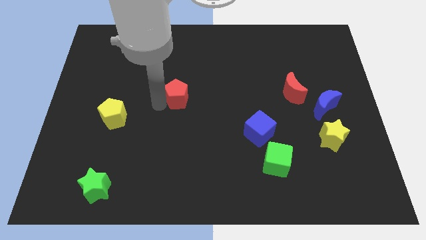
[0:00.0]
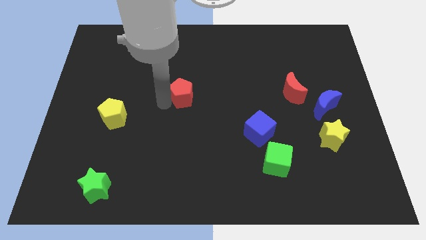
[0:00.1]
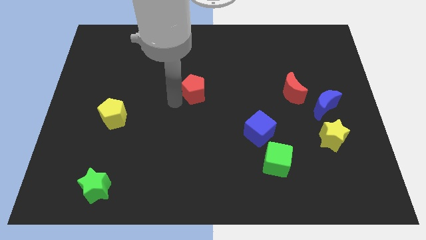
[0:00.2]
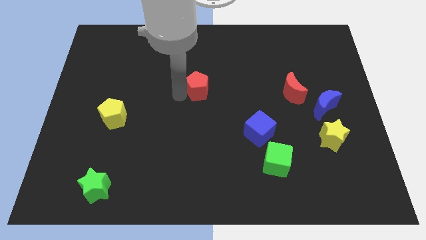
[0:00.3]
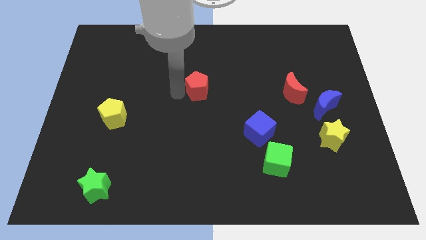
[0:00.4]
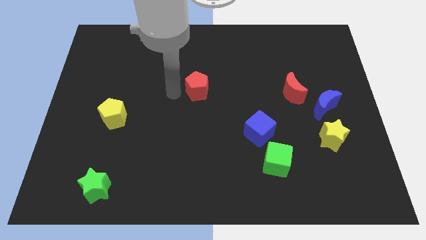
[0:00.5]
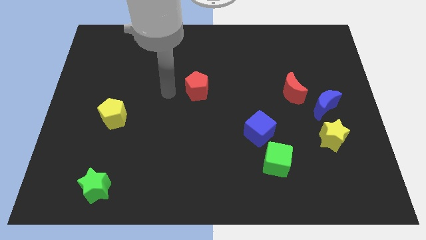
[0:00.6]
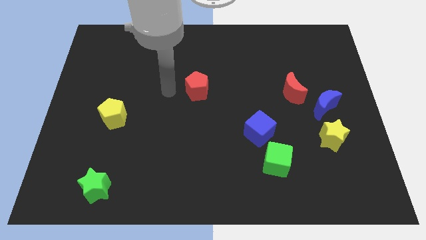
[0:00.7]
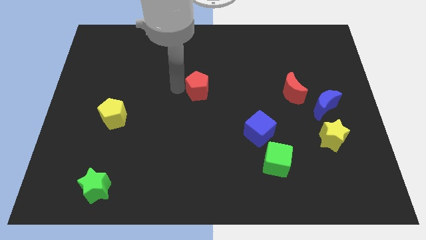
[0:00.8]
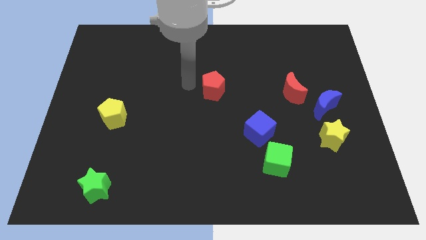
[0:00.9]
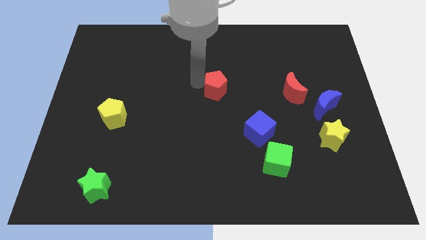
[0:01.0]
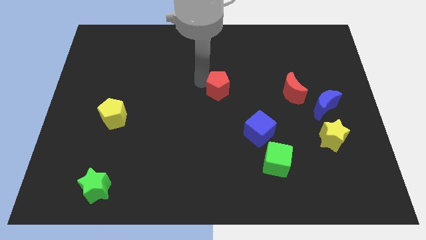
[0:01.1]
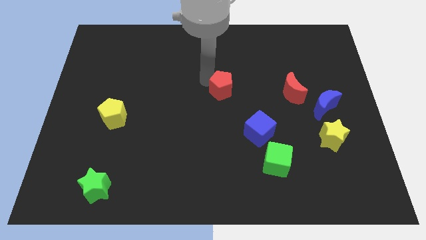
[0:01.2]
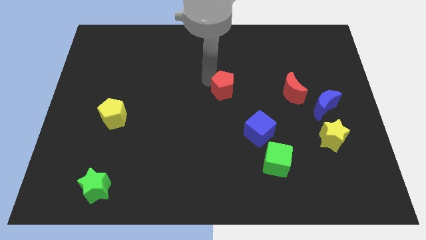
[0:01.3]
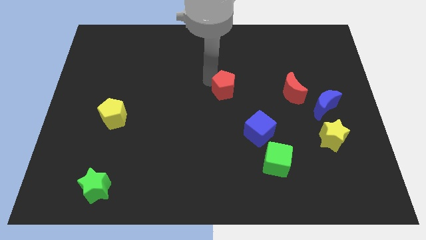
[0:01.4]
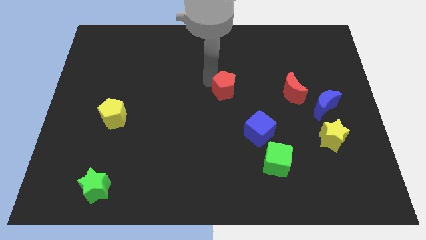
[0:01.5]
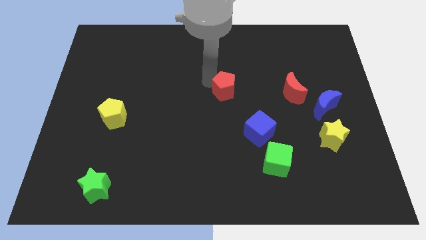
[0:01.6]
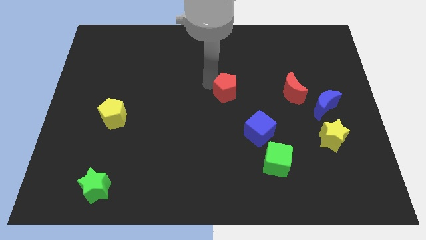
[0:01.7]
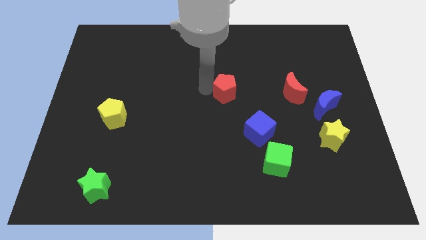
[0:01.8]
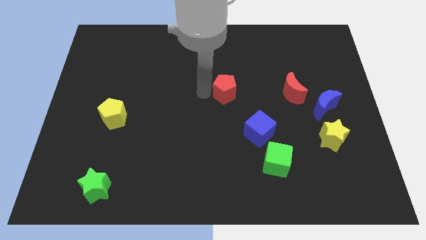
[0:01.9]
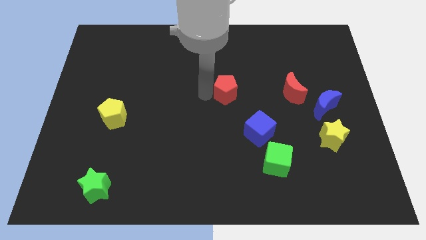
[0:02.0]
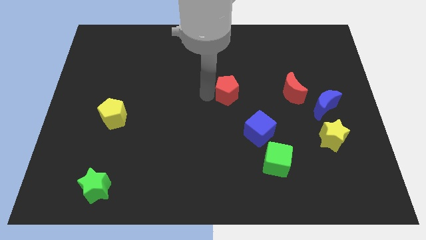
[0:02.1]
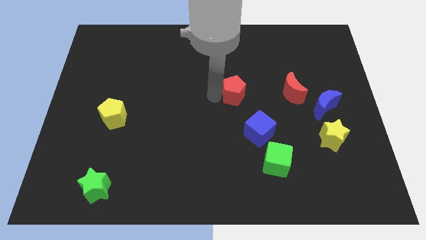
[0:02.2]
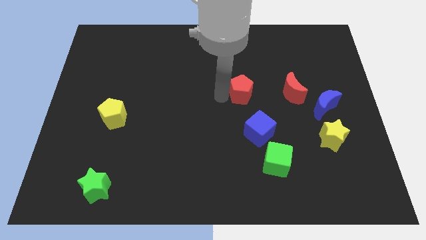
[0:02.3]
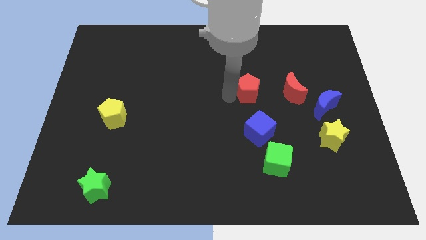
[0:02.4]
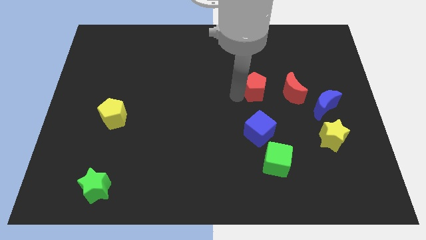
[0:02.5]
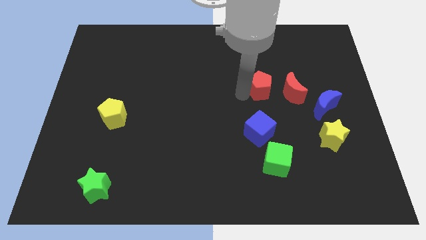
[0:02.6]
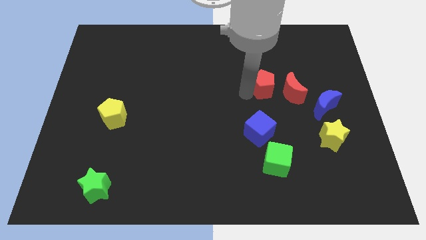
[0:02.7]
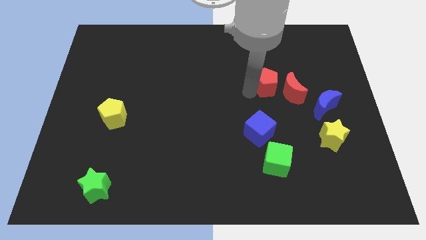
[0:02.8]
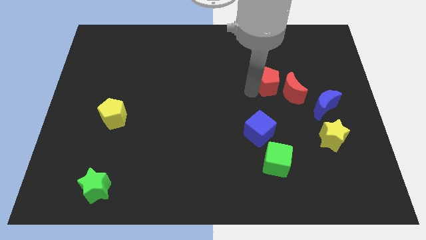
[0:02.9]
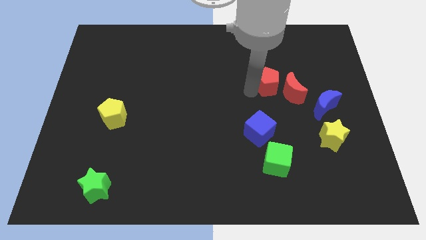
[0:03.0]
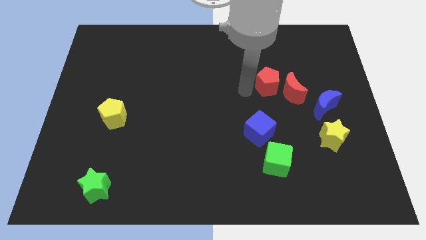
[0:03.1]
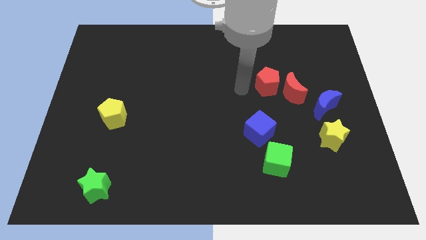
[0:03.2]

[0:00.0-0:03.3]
place the red pentagon close to the red crescent

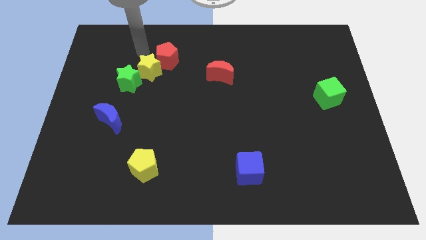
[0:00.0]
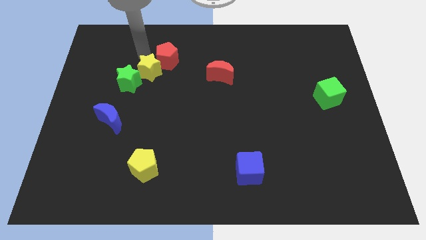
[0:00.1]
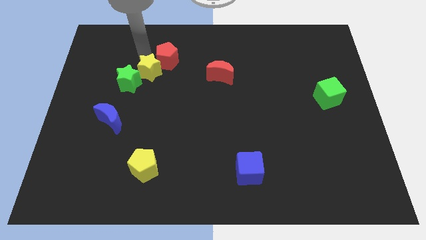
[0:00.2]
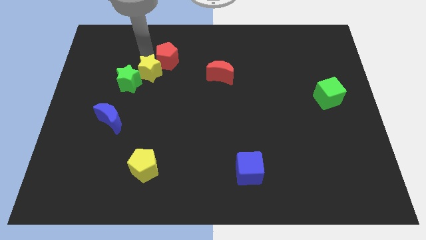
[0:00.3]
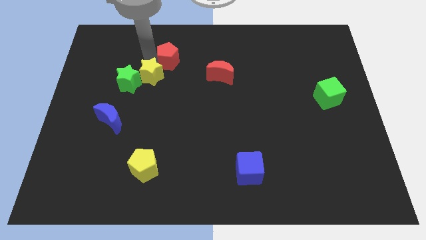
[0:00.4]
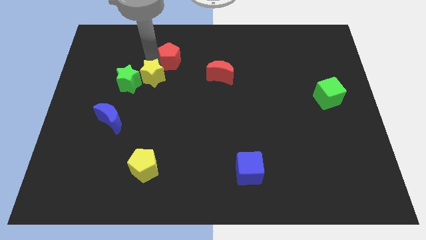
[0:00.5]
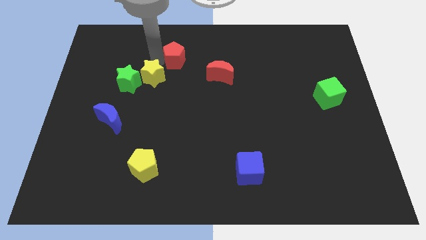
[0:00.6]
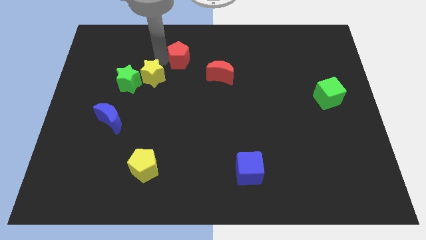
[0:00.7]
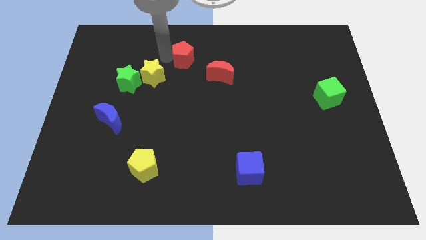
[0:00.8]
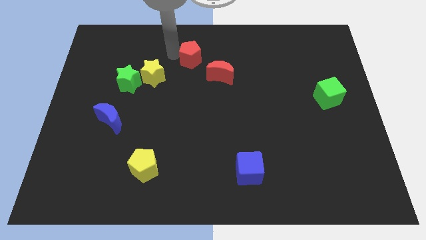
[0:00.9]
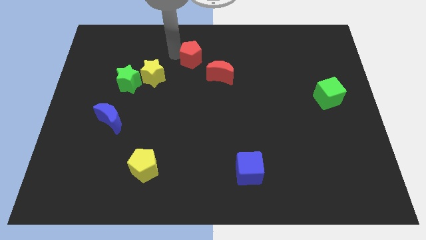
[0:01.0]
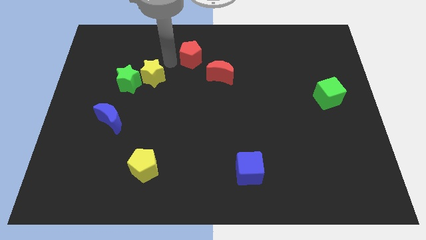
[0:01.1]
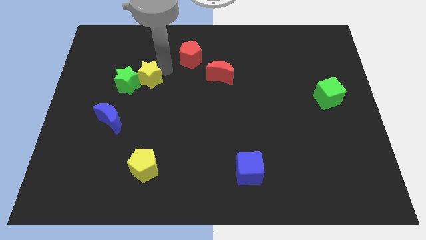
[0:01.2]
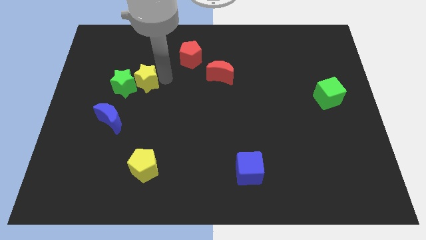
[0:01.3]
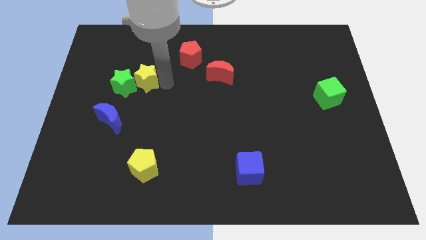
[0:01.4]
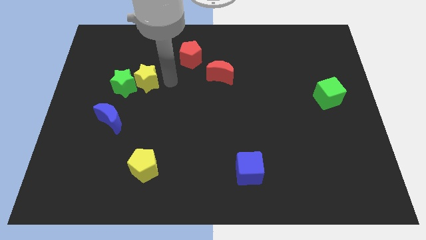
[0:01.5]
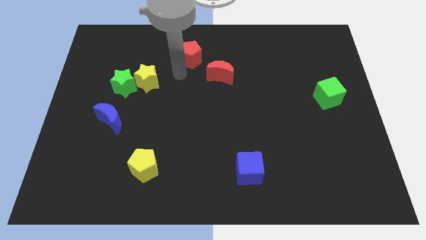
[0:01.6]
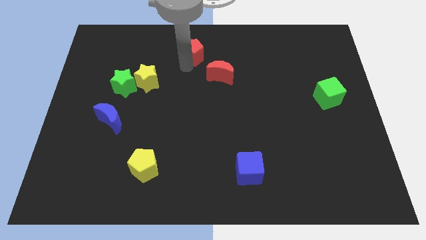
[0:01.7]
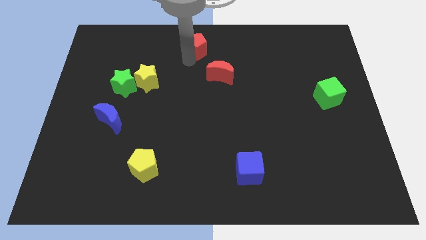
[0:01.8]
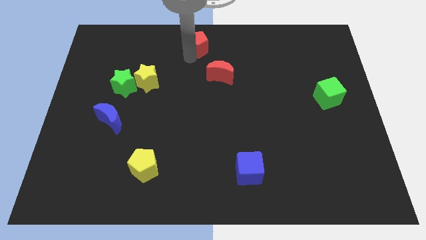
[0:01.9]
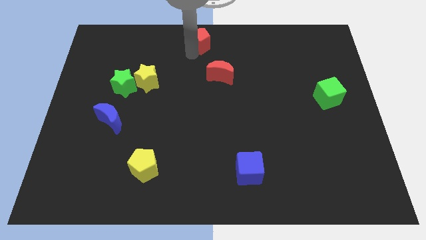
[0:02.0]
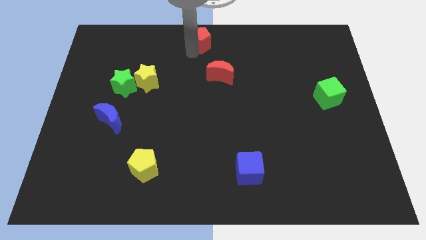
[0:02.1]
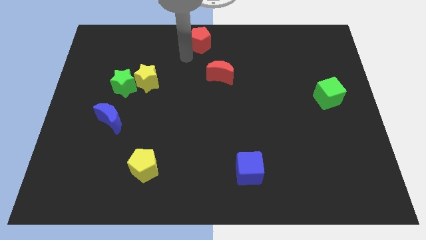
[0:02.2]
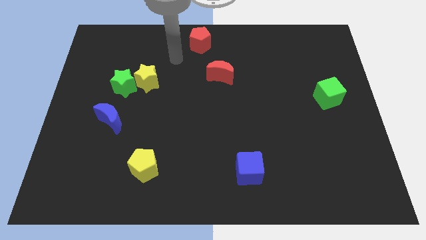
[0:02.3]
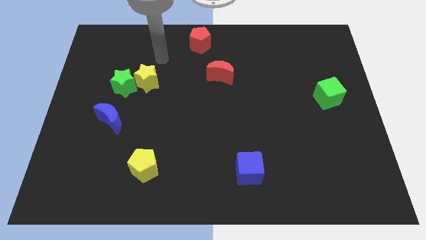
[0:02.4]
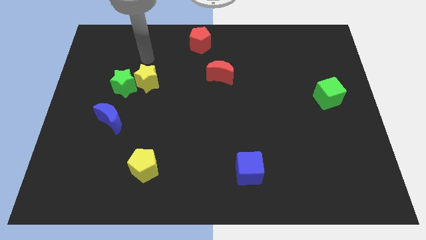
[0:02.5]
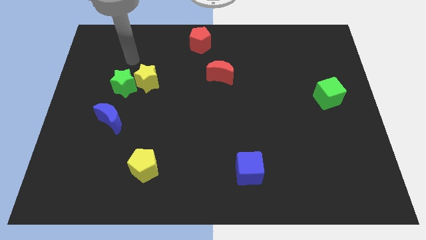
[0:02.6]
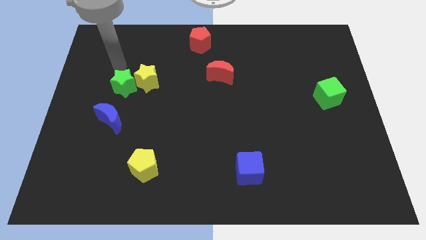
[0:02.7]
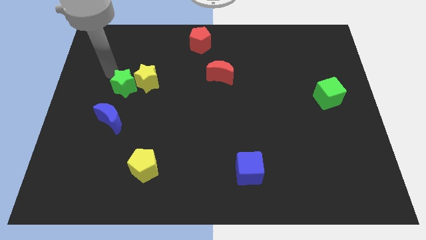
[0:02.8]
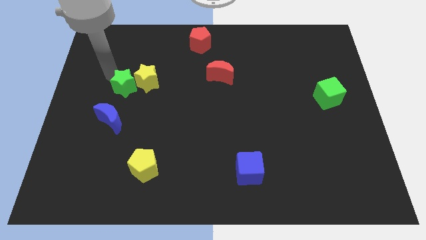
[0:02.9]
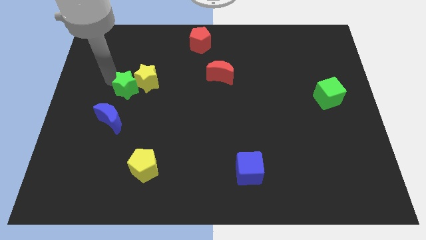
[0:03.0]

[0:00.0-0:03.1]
place the red pentagon at the top center of the board

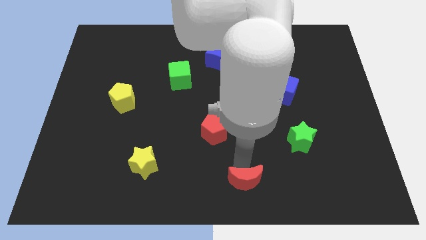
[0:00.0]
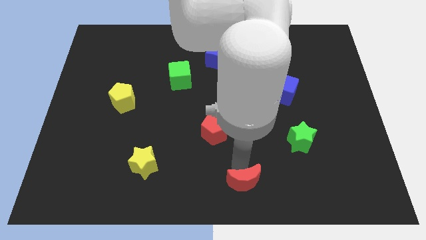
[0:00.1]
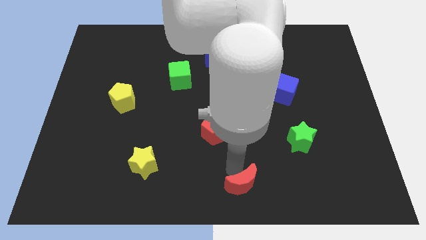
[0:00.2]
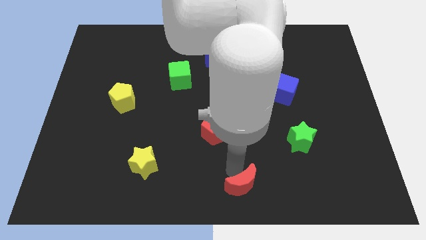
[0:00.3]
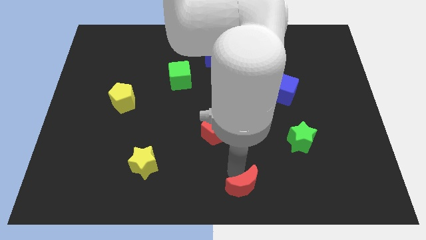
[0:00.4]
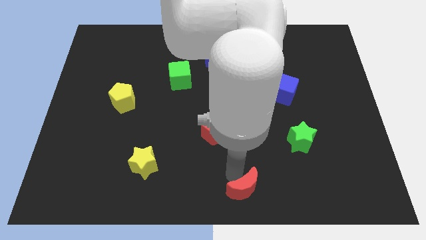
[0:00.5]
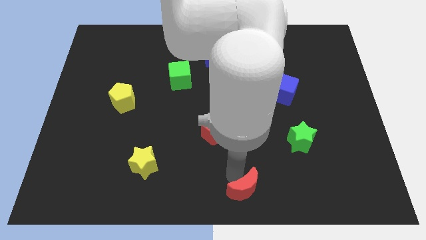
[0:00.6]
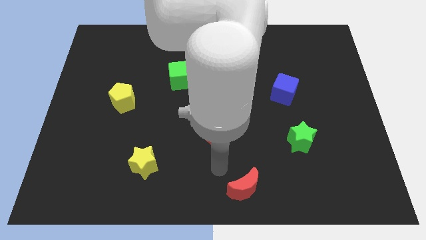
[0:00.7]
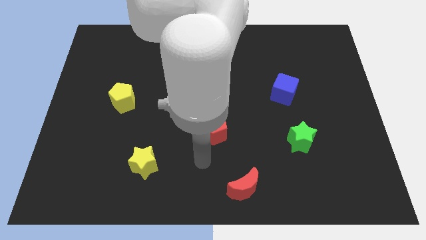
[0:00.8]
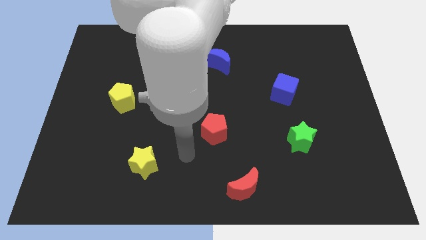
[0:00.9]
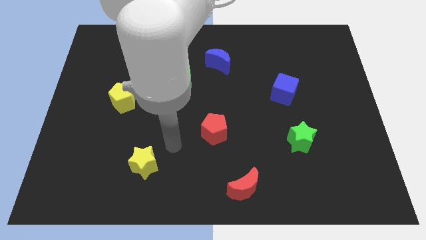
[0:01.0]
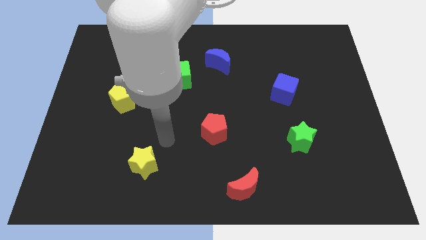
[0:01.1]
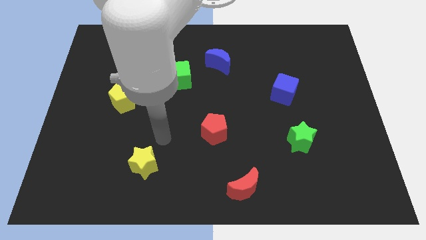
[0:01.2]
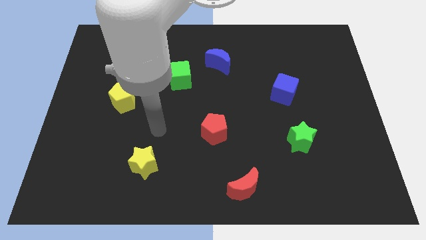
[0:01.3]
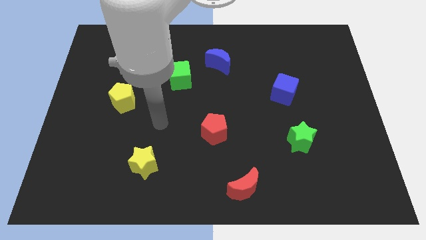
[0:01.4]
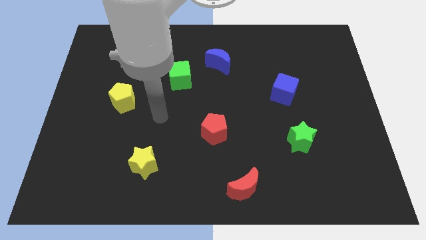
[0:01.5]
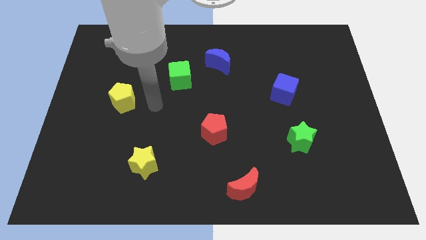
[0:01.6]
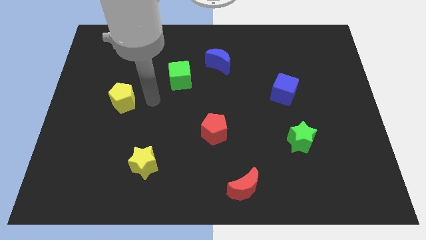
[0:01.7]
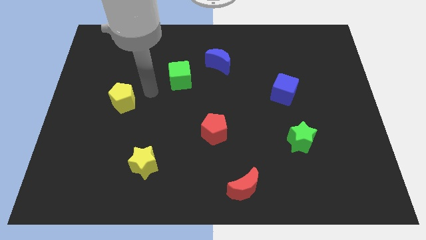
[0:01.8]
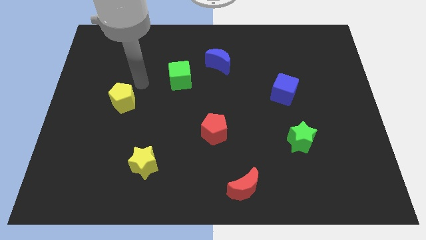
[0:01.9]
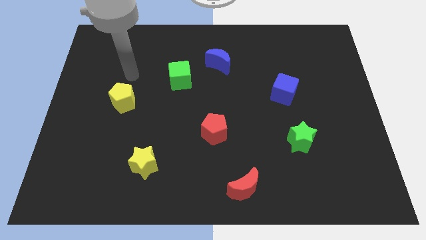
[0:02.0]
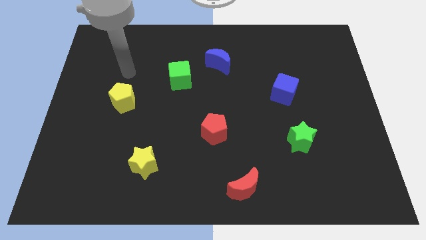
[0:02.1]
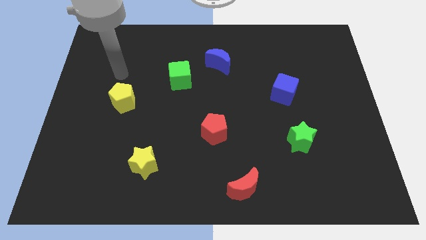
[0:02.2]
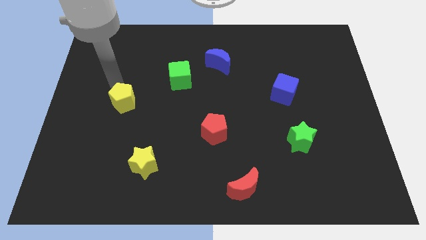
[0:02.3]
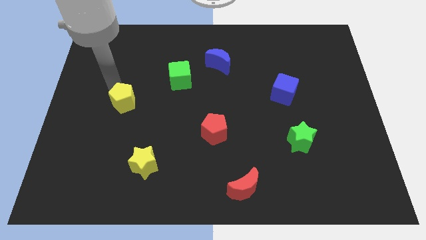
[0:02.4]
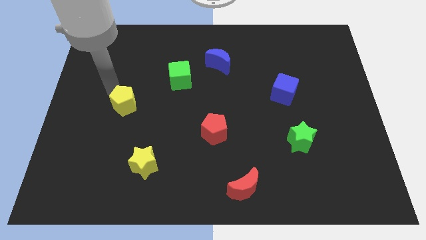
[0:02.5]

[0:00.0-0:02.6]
move your arm to the top of yellow pentagon
